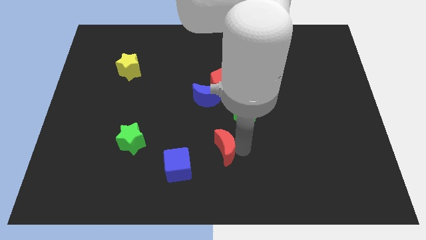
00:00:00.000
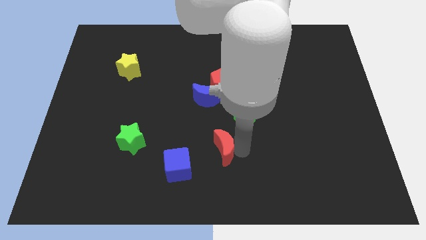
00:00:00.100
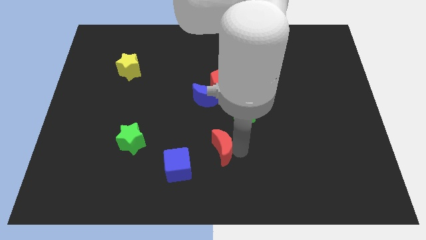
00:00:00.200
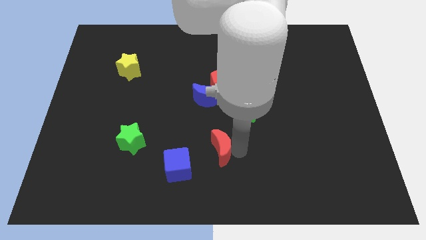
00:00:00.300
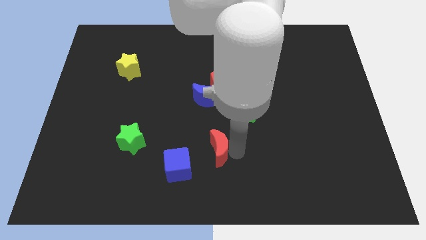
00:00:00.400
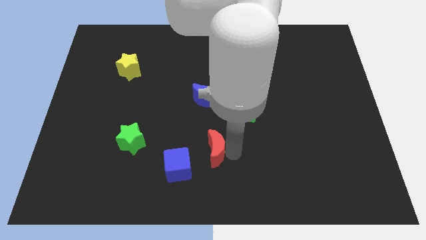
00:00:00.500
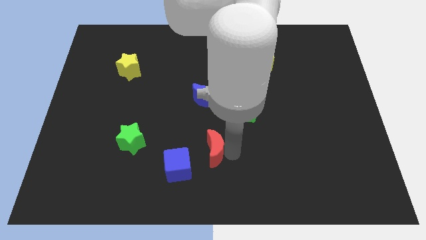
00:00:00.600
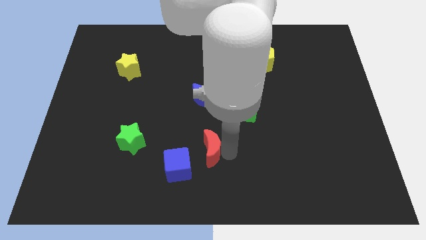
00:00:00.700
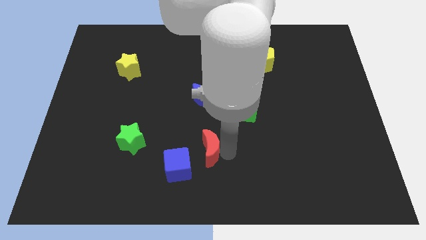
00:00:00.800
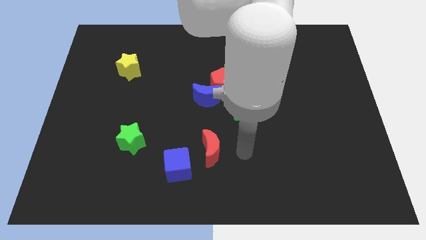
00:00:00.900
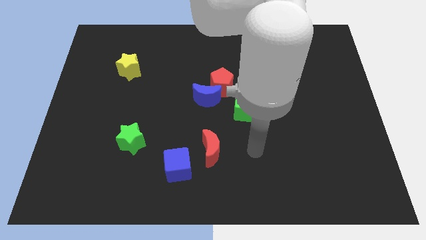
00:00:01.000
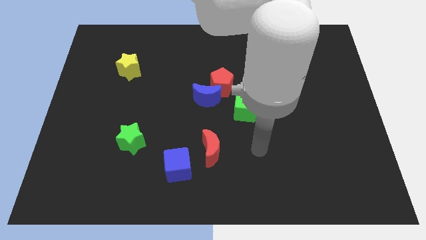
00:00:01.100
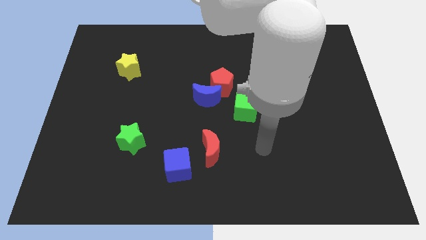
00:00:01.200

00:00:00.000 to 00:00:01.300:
move the red crescent towards the blue cube

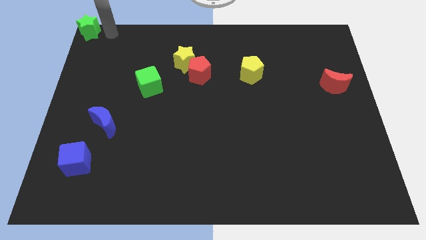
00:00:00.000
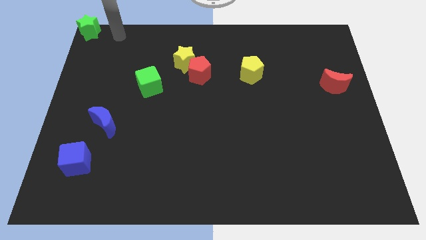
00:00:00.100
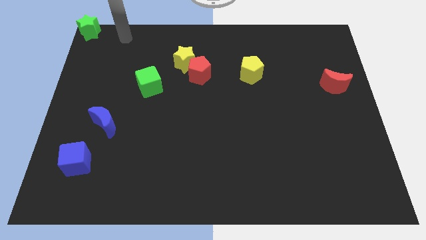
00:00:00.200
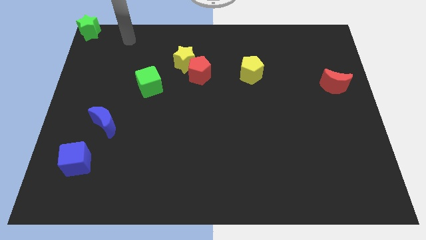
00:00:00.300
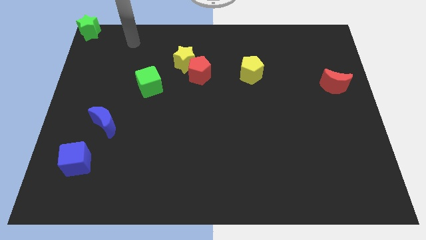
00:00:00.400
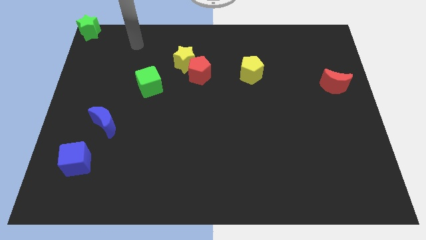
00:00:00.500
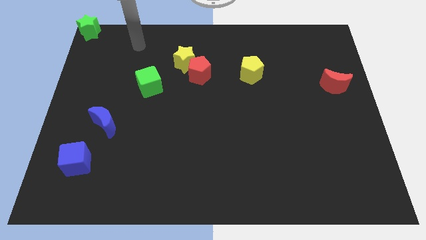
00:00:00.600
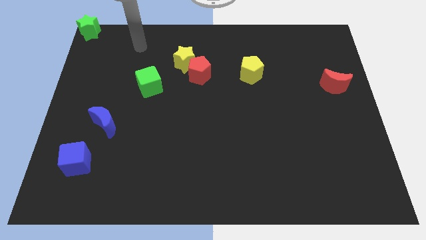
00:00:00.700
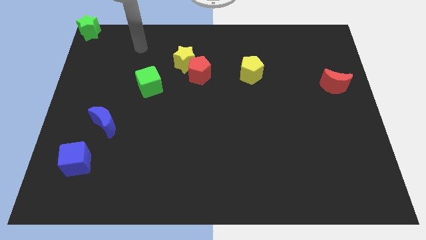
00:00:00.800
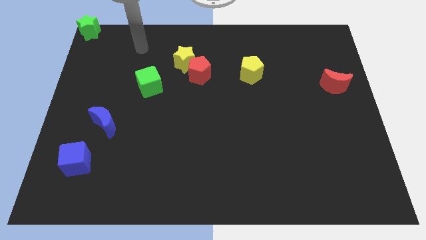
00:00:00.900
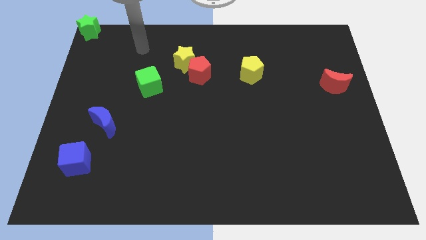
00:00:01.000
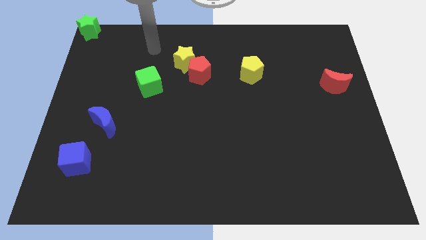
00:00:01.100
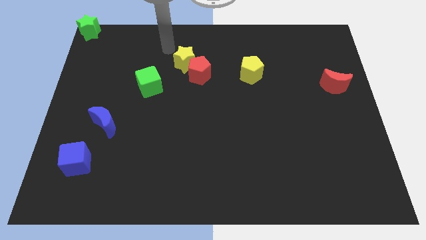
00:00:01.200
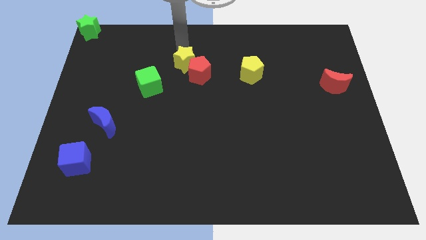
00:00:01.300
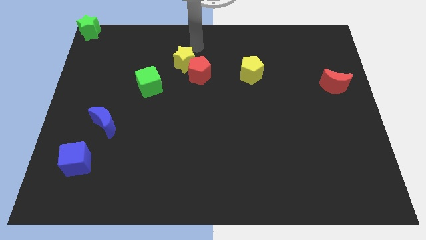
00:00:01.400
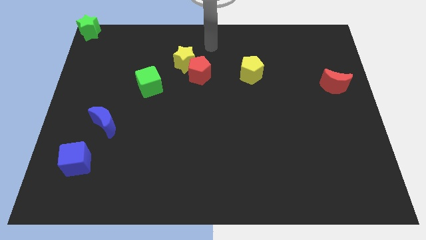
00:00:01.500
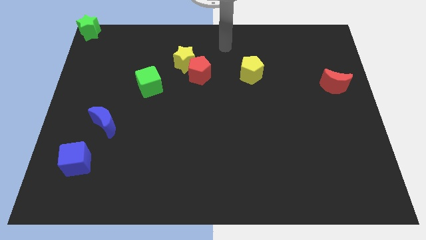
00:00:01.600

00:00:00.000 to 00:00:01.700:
move the arm away from the green star

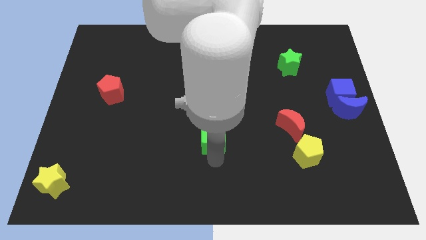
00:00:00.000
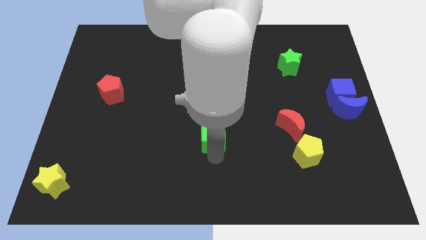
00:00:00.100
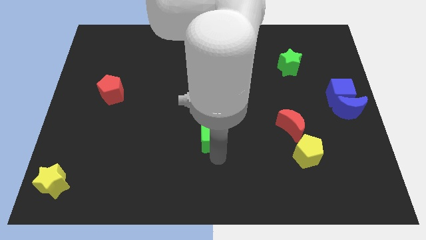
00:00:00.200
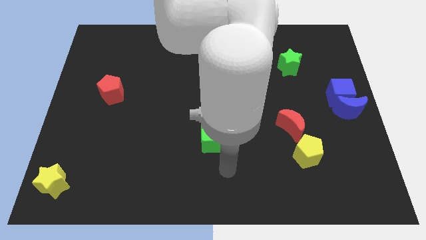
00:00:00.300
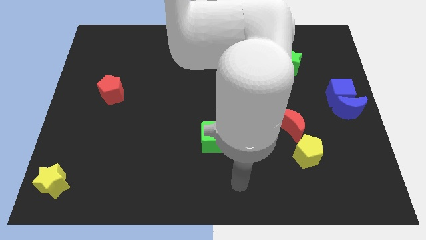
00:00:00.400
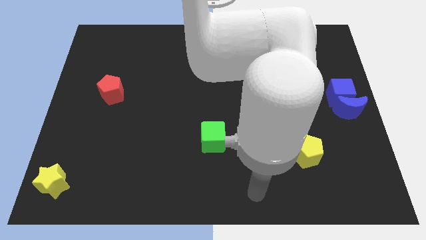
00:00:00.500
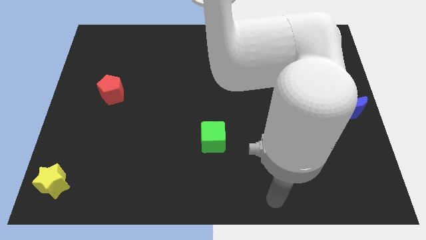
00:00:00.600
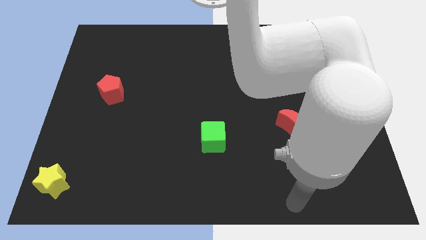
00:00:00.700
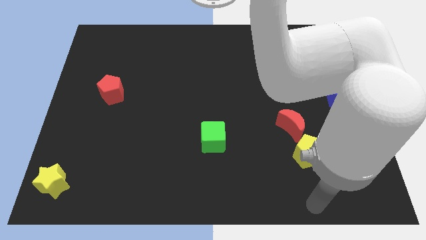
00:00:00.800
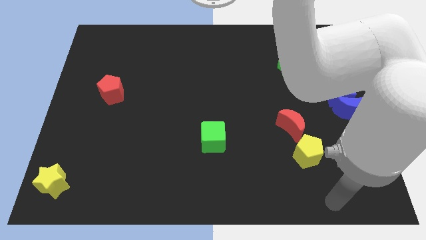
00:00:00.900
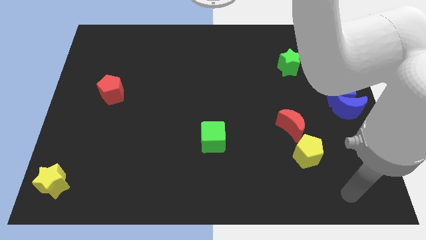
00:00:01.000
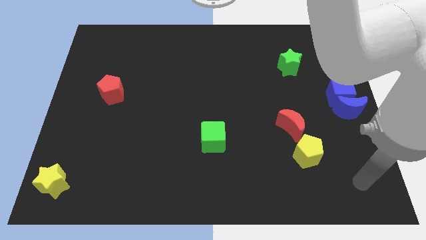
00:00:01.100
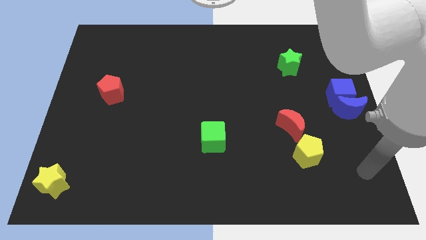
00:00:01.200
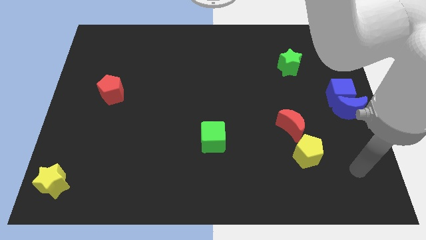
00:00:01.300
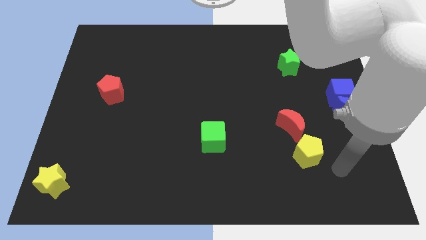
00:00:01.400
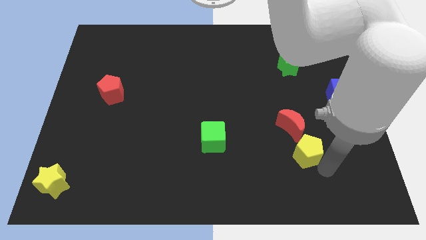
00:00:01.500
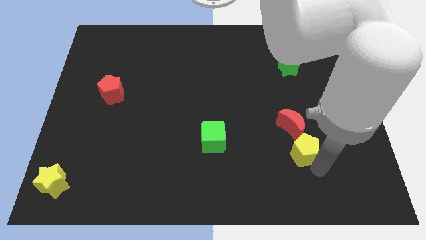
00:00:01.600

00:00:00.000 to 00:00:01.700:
place your arm below yellow pentagon

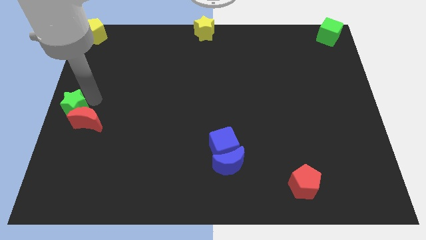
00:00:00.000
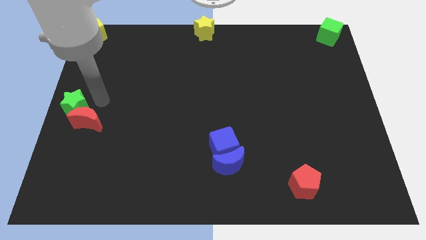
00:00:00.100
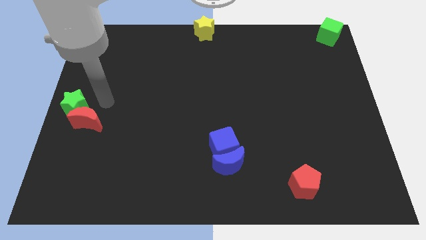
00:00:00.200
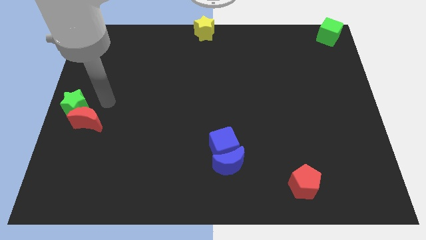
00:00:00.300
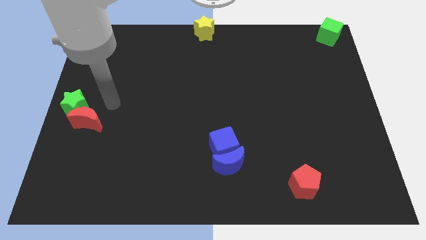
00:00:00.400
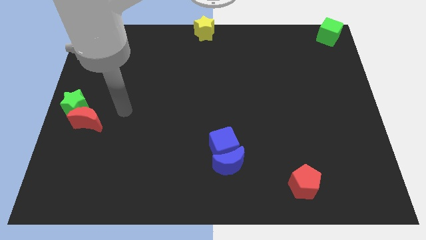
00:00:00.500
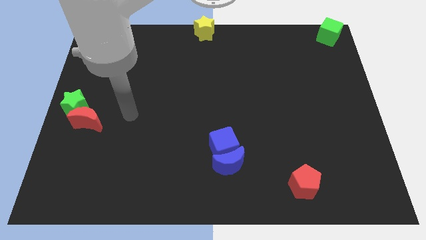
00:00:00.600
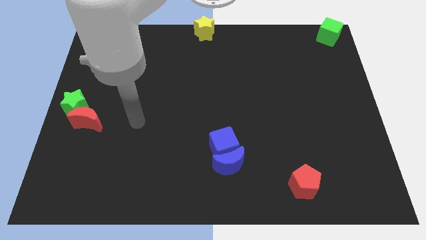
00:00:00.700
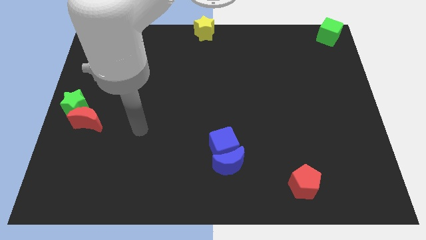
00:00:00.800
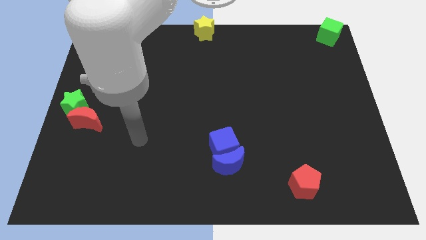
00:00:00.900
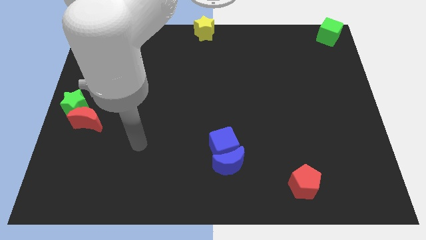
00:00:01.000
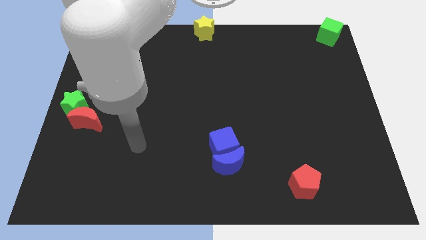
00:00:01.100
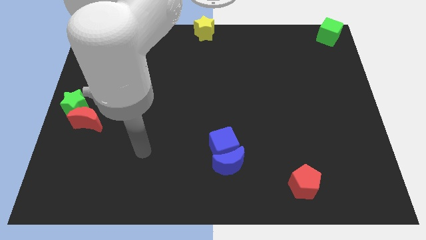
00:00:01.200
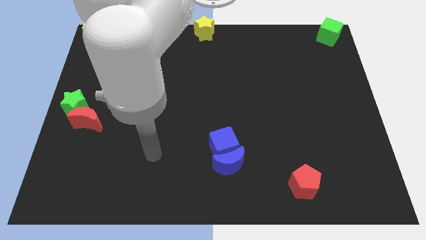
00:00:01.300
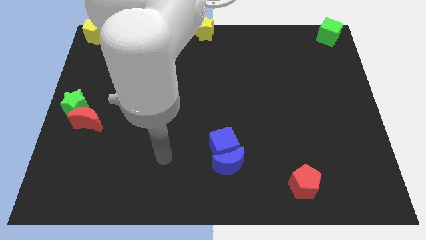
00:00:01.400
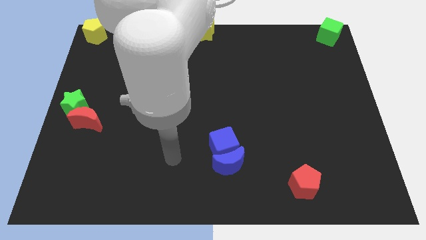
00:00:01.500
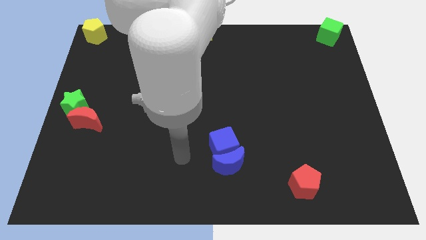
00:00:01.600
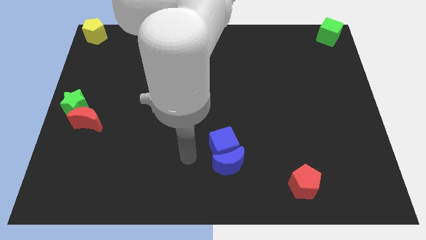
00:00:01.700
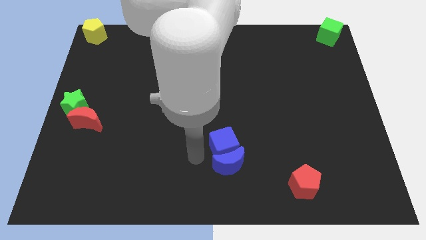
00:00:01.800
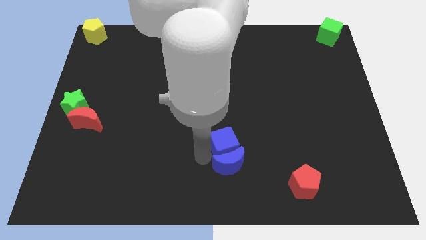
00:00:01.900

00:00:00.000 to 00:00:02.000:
point the arm to the left of the blue blocks

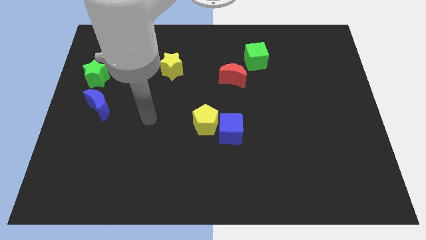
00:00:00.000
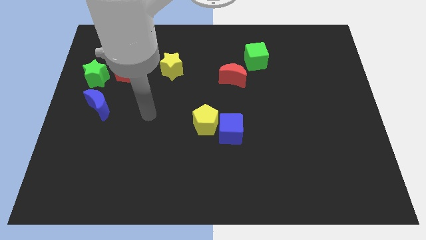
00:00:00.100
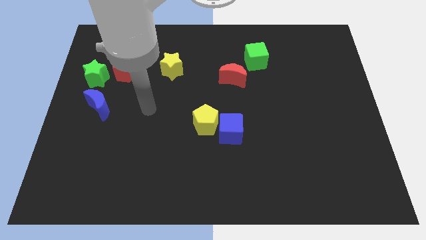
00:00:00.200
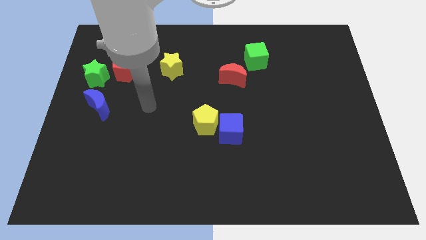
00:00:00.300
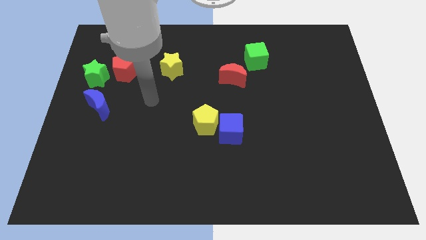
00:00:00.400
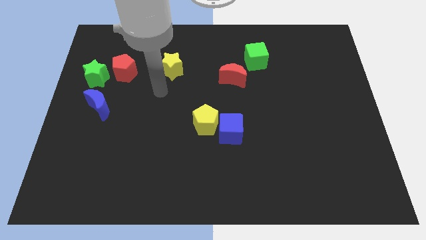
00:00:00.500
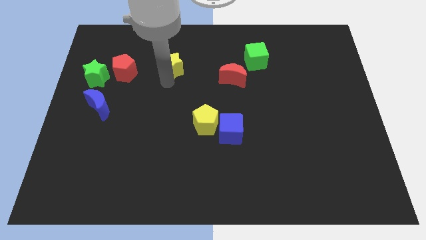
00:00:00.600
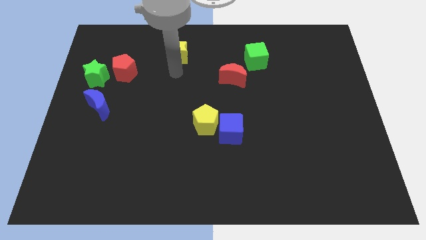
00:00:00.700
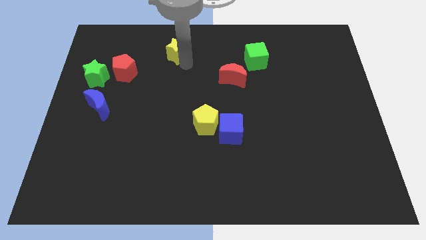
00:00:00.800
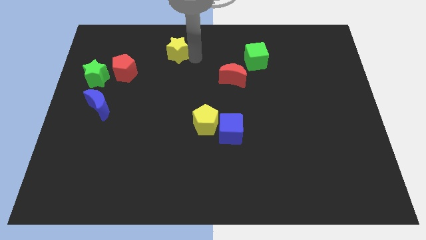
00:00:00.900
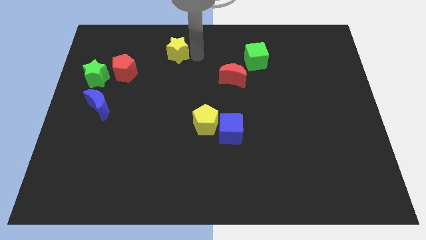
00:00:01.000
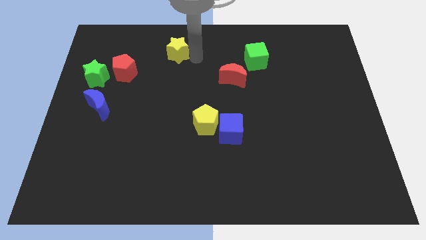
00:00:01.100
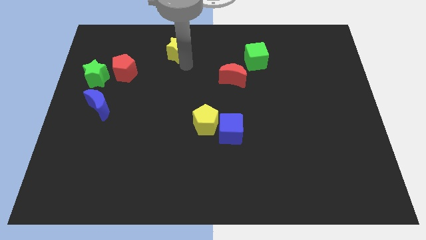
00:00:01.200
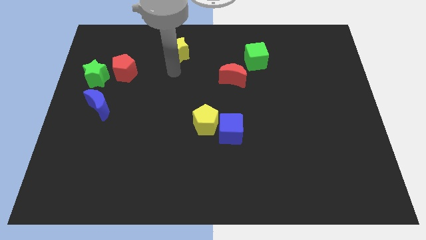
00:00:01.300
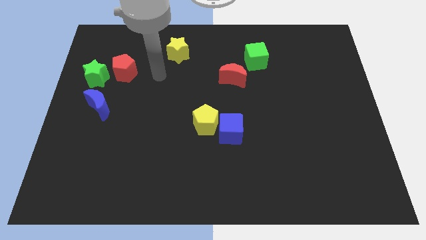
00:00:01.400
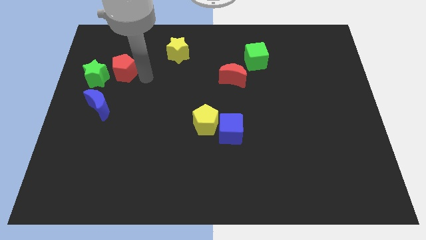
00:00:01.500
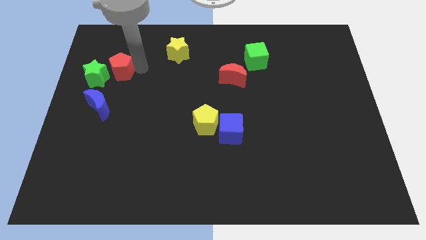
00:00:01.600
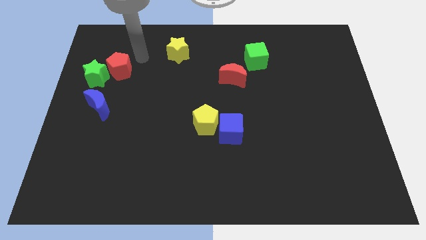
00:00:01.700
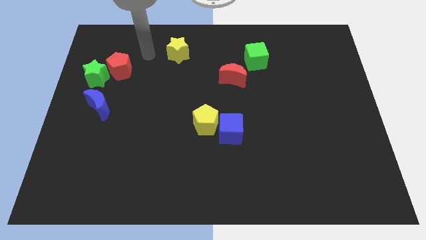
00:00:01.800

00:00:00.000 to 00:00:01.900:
slightly push the yellow star towards the top of the board

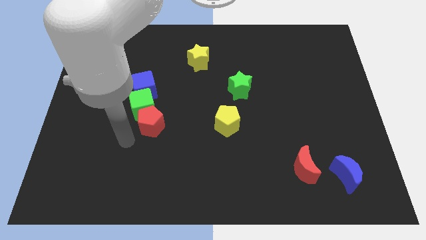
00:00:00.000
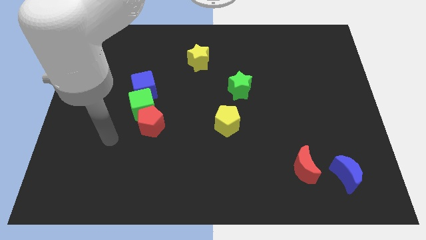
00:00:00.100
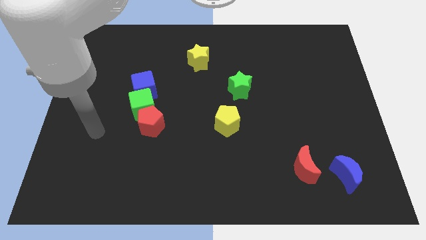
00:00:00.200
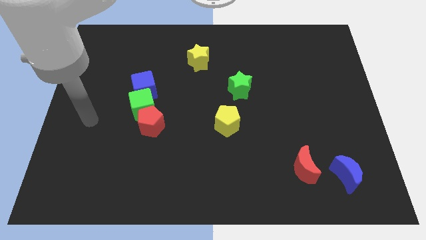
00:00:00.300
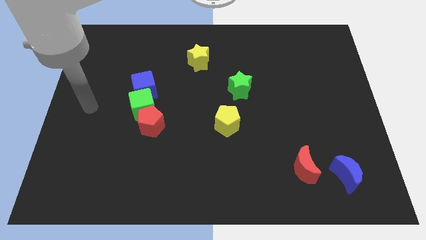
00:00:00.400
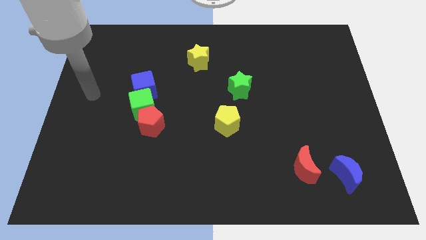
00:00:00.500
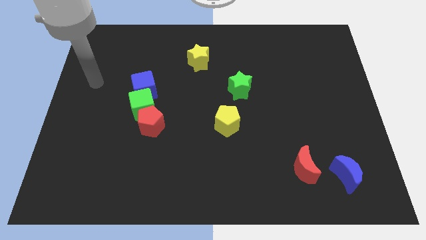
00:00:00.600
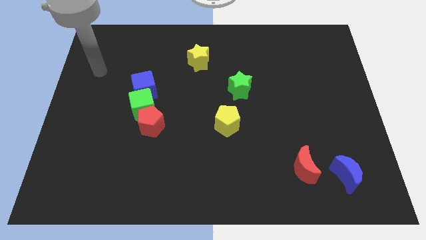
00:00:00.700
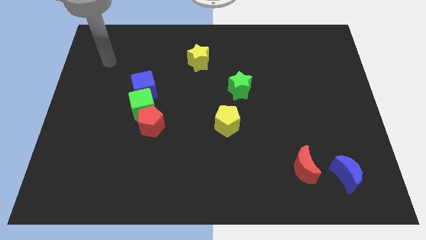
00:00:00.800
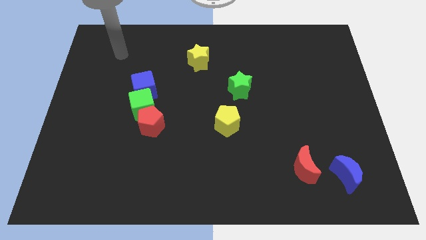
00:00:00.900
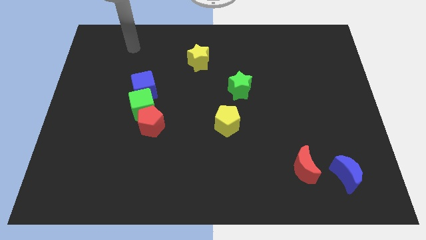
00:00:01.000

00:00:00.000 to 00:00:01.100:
move your arm away from red pentagon
